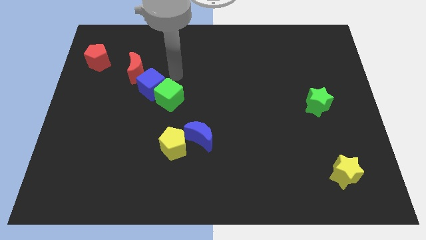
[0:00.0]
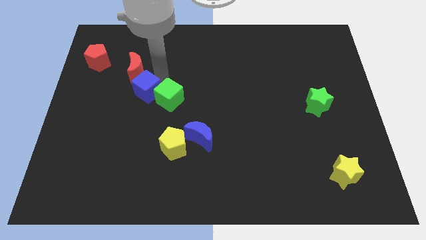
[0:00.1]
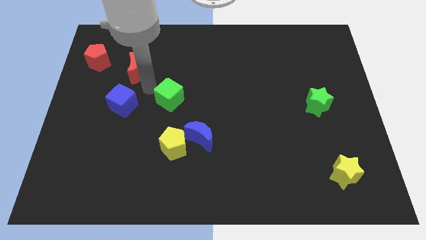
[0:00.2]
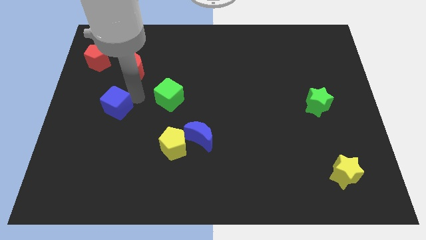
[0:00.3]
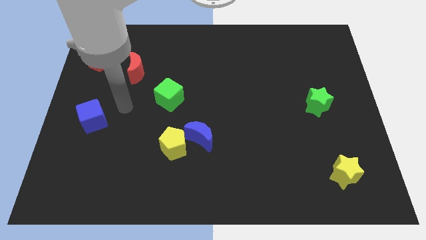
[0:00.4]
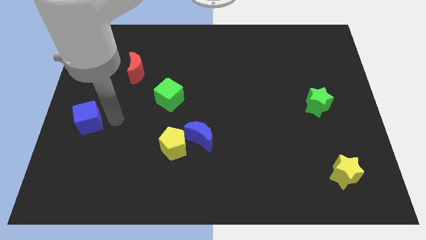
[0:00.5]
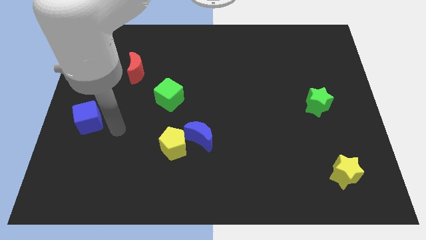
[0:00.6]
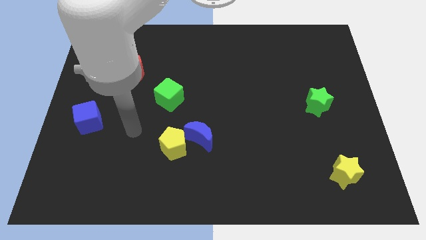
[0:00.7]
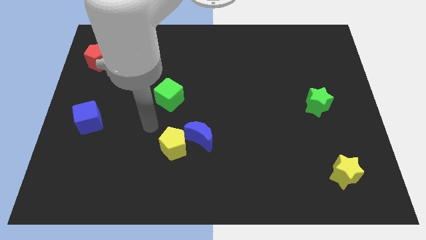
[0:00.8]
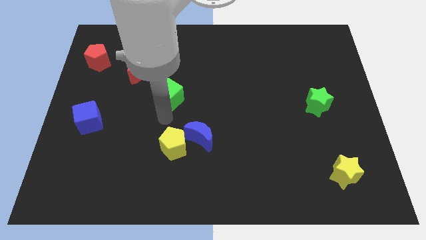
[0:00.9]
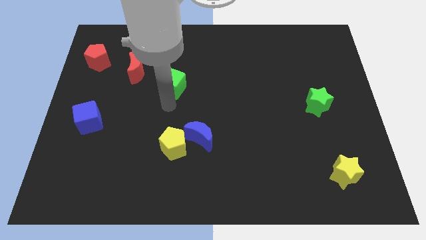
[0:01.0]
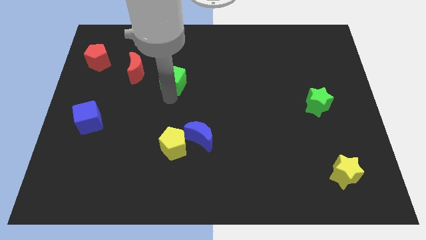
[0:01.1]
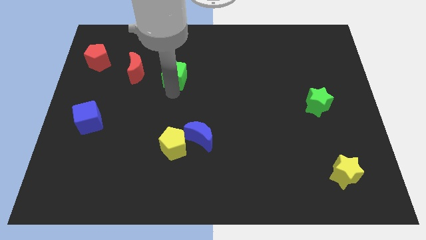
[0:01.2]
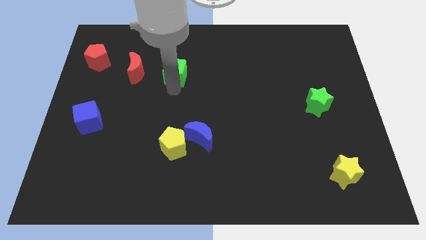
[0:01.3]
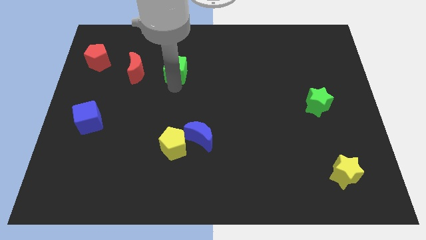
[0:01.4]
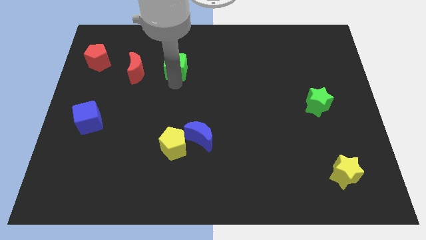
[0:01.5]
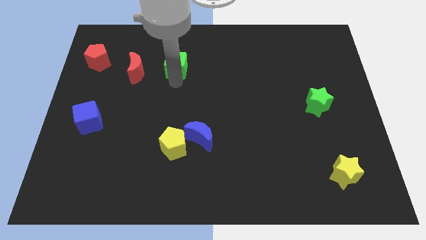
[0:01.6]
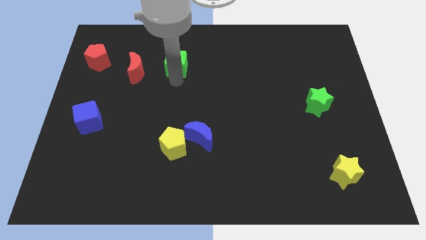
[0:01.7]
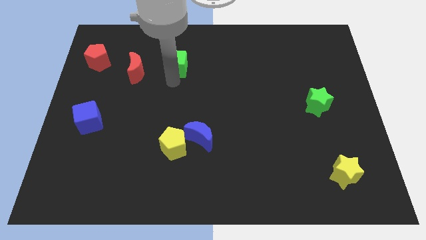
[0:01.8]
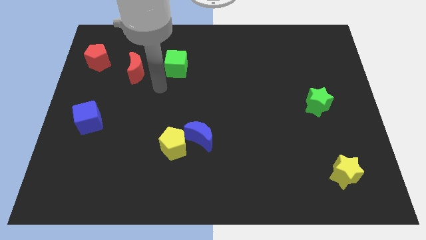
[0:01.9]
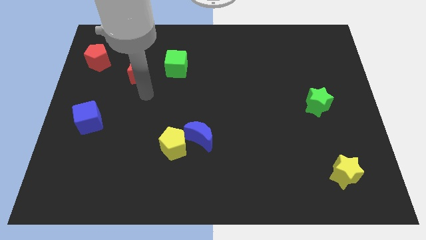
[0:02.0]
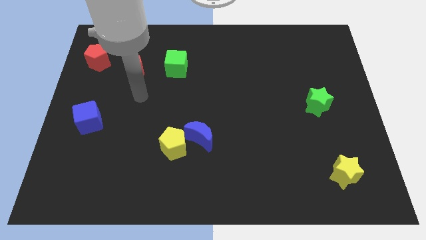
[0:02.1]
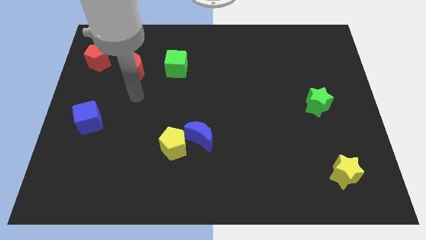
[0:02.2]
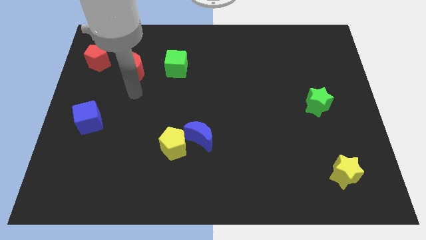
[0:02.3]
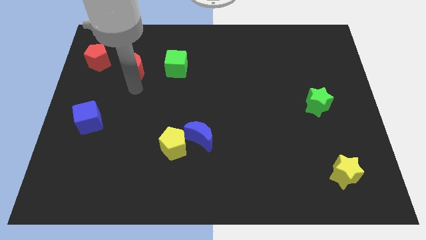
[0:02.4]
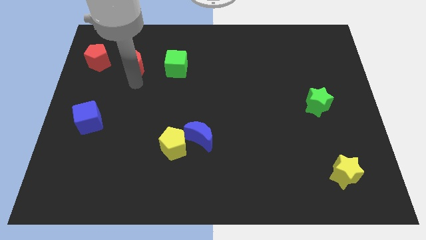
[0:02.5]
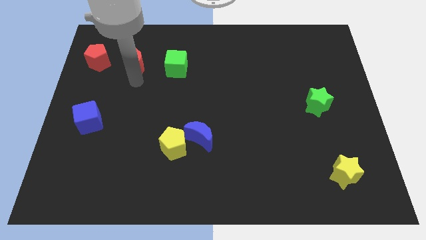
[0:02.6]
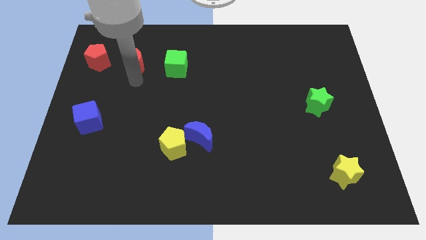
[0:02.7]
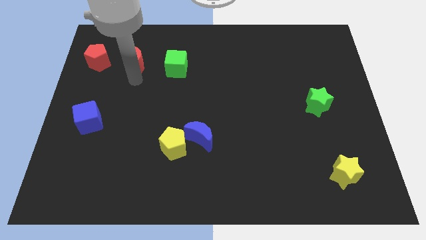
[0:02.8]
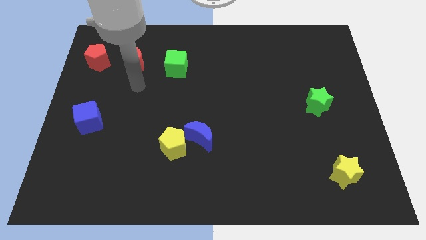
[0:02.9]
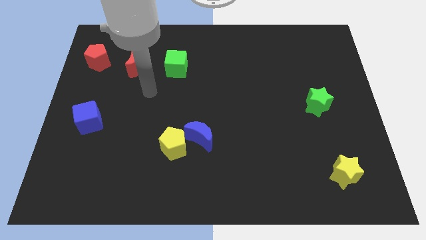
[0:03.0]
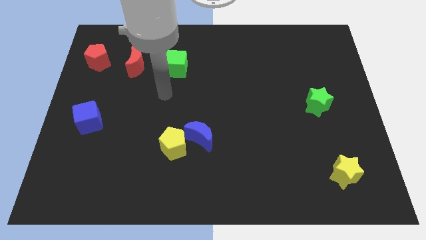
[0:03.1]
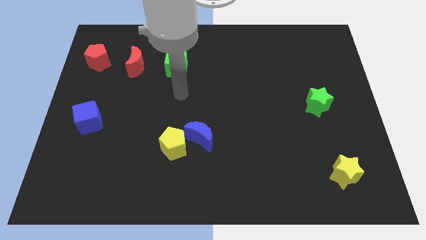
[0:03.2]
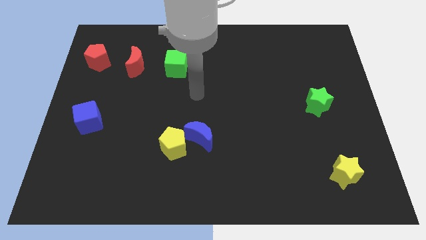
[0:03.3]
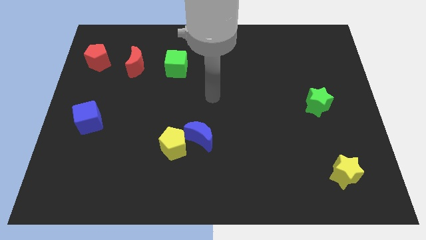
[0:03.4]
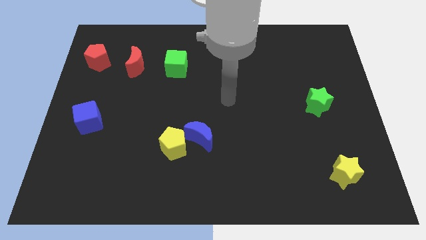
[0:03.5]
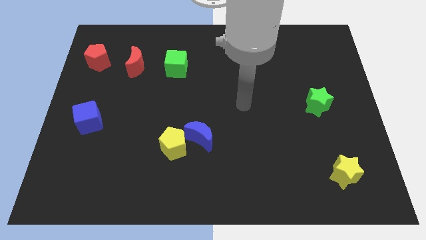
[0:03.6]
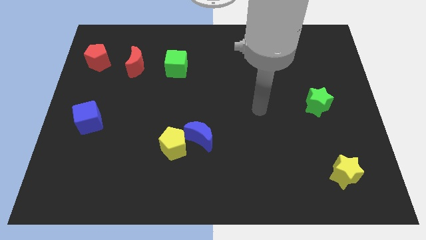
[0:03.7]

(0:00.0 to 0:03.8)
move blue cube diagonally towards left side of the board

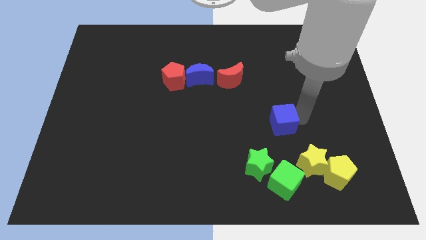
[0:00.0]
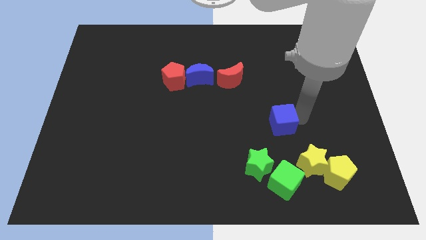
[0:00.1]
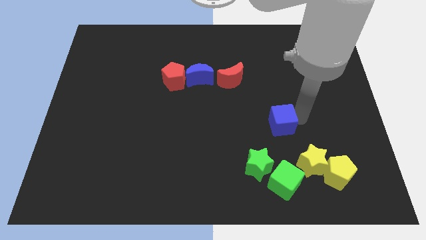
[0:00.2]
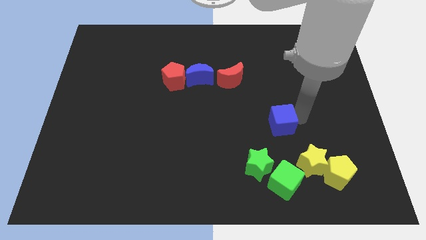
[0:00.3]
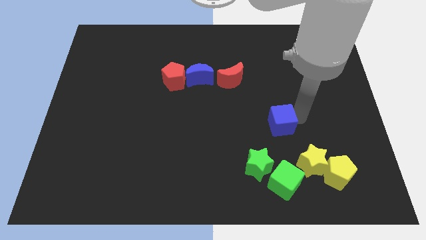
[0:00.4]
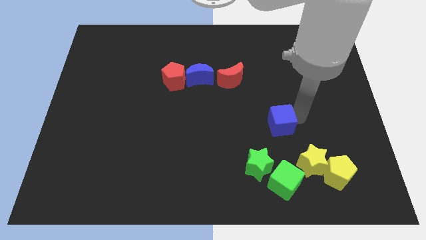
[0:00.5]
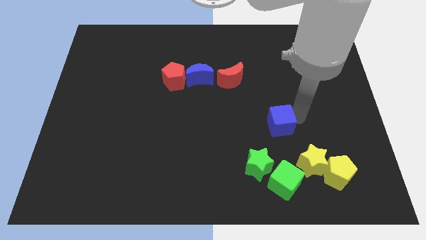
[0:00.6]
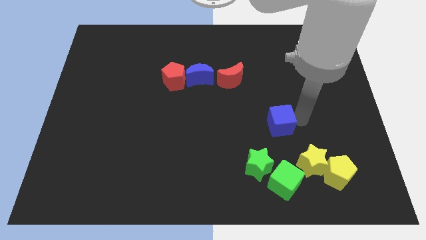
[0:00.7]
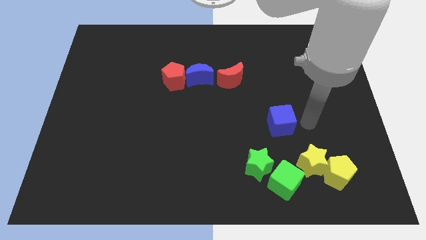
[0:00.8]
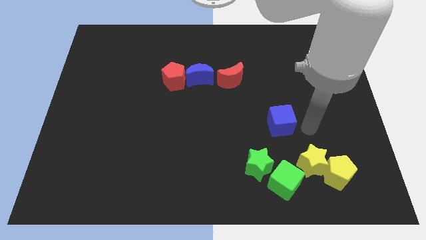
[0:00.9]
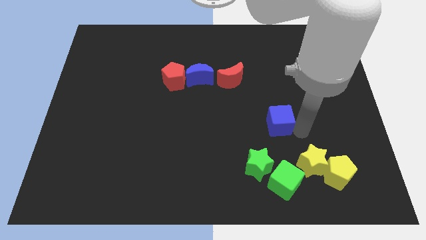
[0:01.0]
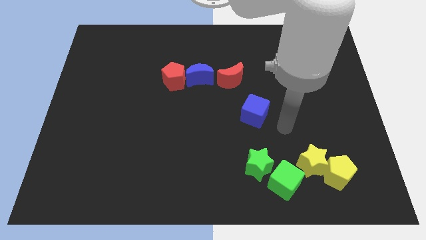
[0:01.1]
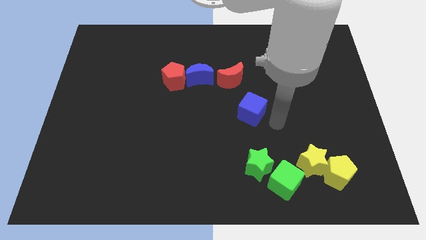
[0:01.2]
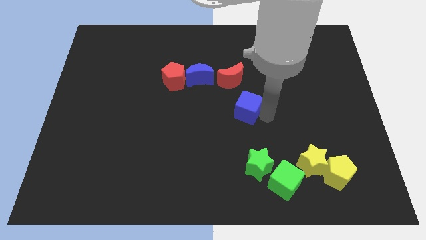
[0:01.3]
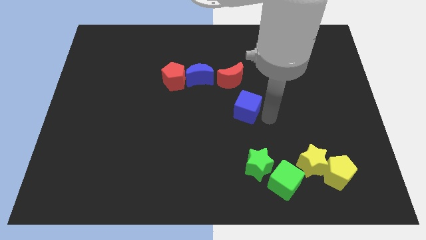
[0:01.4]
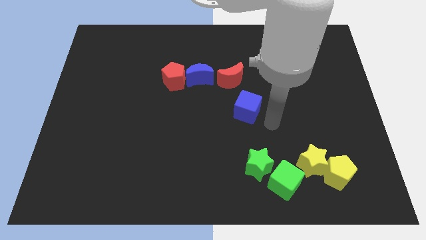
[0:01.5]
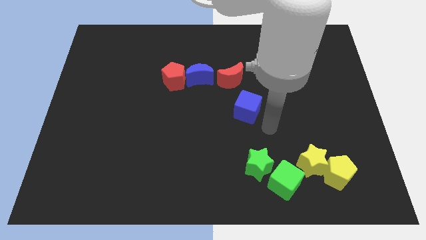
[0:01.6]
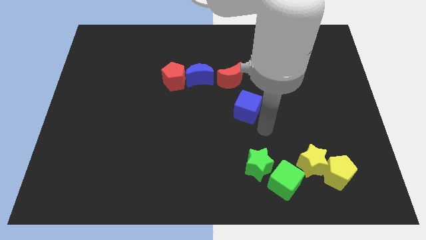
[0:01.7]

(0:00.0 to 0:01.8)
place the blue cube in between the green star and red crescent

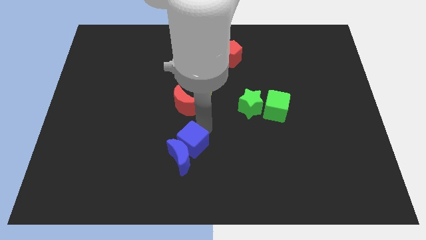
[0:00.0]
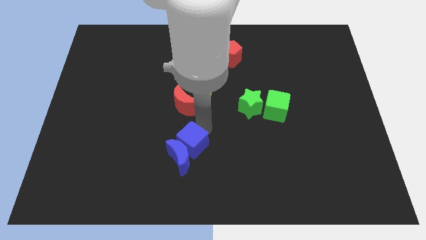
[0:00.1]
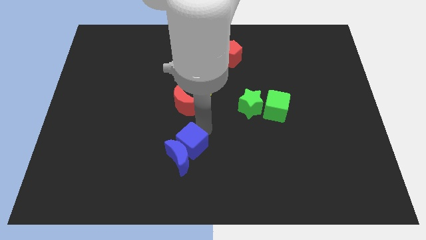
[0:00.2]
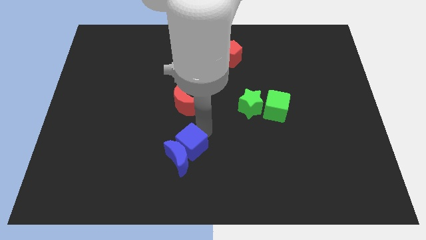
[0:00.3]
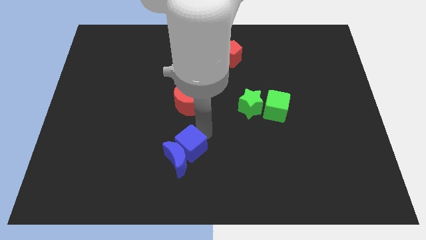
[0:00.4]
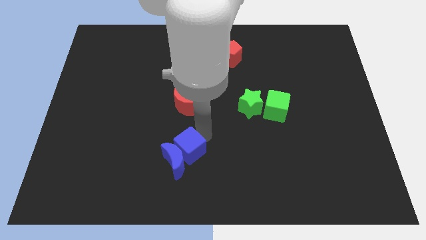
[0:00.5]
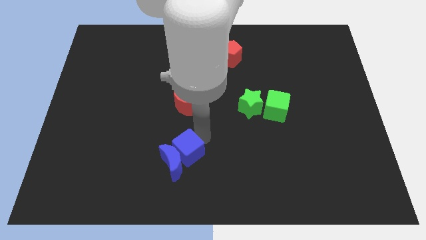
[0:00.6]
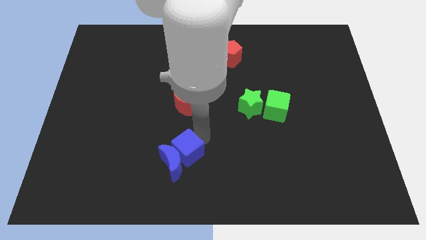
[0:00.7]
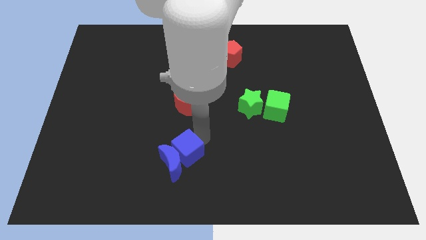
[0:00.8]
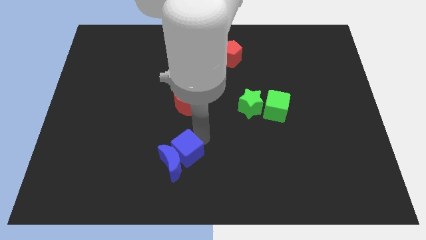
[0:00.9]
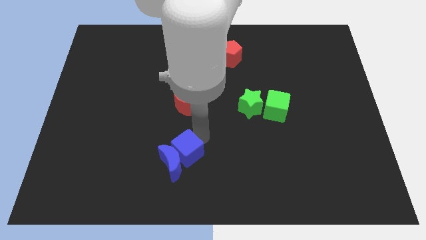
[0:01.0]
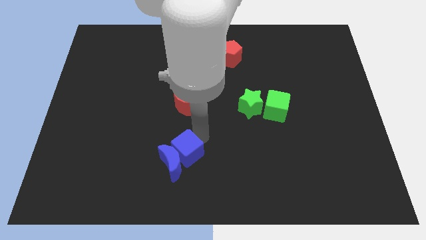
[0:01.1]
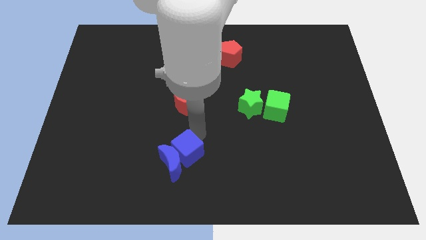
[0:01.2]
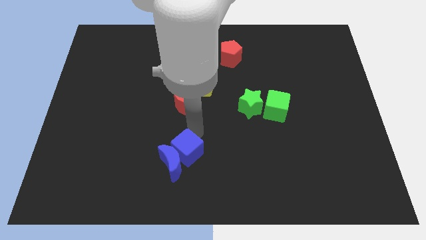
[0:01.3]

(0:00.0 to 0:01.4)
push the blue blocks towards the bottom side of the board

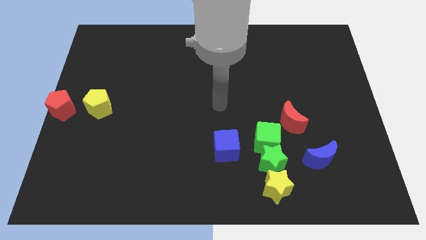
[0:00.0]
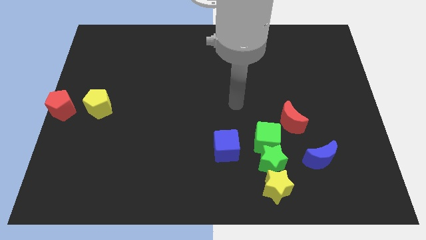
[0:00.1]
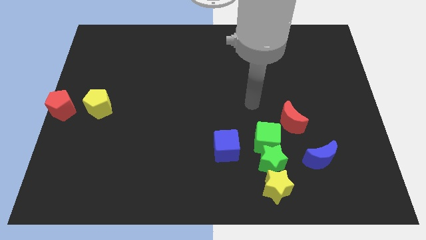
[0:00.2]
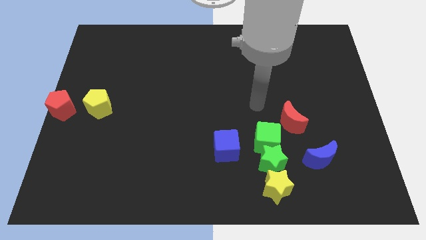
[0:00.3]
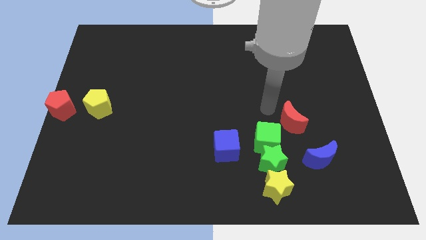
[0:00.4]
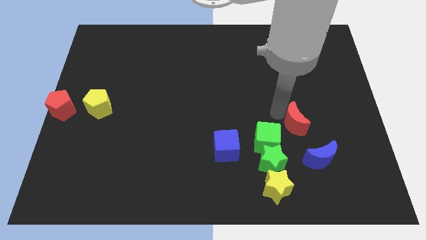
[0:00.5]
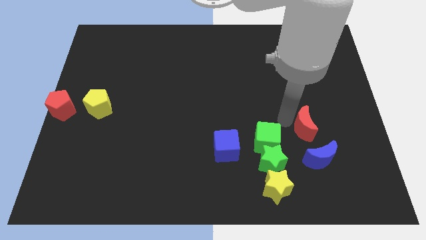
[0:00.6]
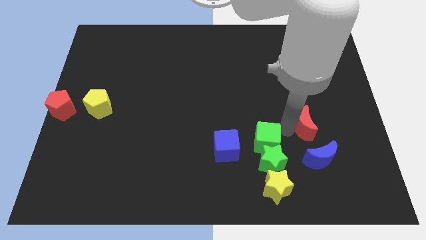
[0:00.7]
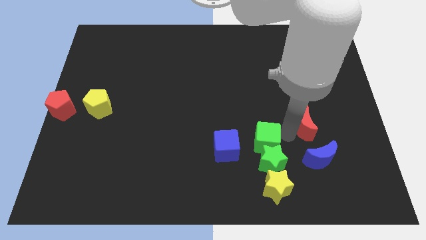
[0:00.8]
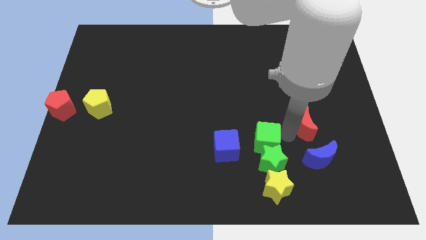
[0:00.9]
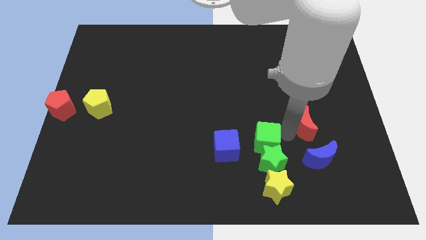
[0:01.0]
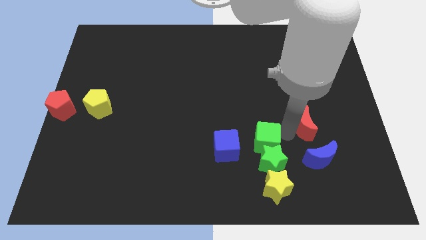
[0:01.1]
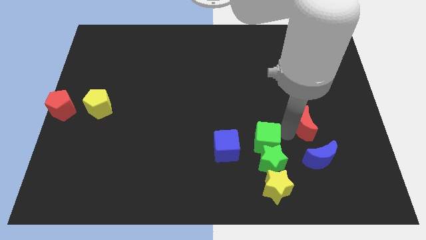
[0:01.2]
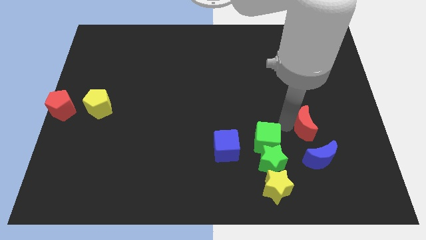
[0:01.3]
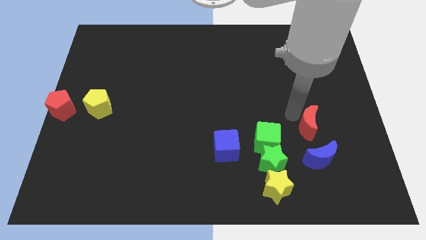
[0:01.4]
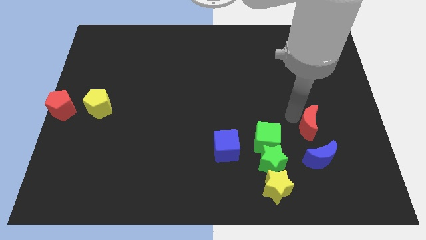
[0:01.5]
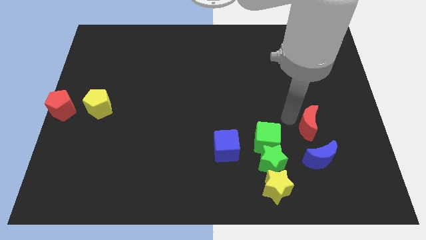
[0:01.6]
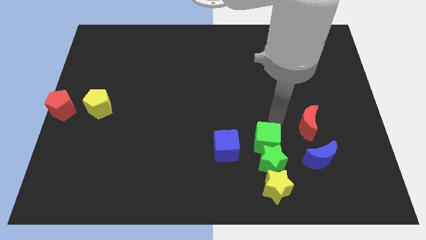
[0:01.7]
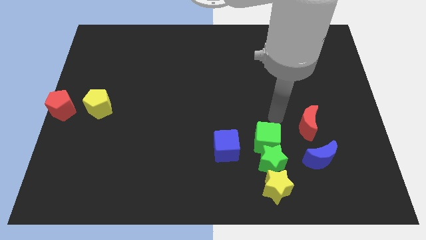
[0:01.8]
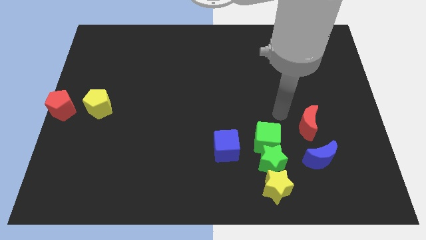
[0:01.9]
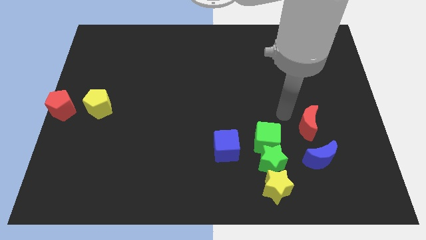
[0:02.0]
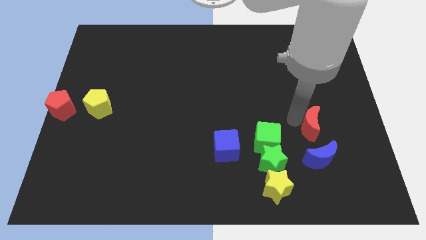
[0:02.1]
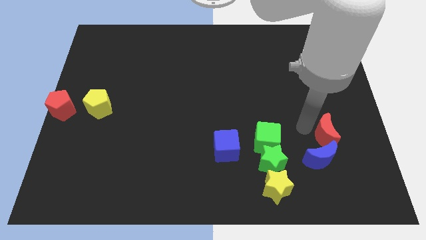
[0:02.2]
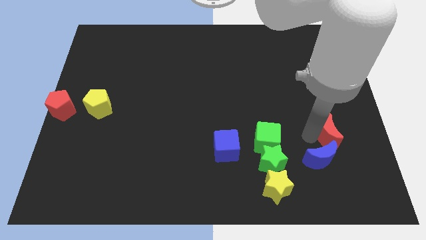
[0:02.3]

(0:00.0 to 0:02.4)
move the red moon toward the center right
